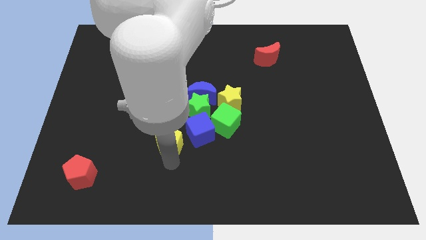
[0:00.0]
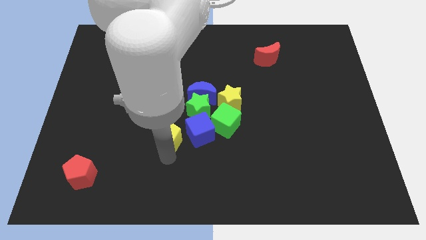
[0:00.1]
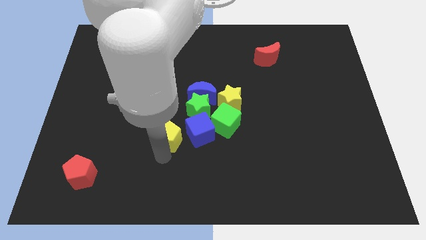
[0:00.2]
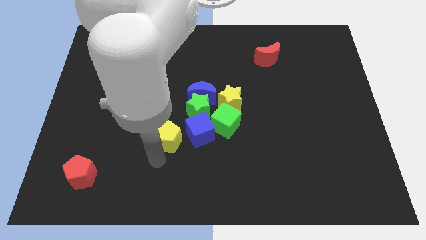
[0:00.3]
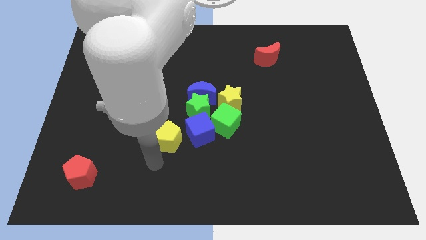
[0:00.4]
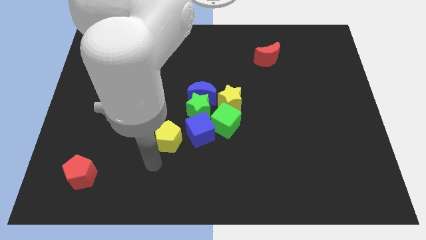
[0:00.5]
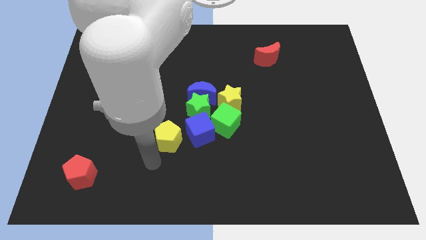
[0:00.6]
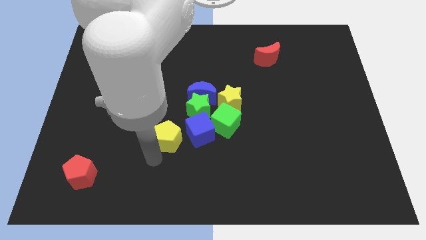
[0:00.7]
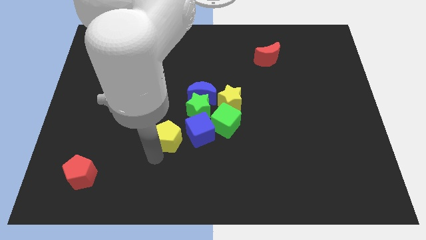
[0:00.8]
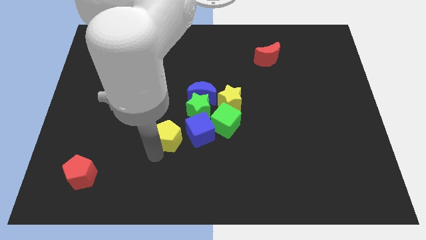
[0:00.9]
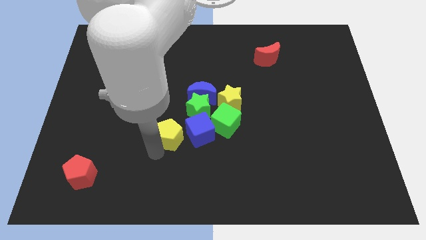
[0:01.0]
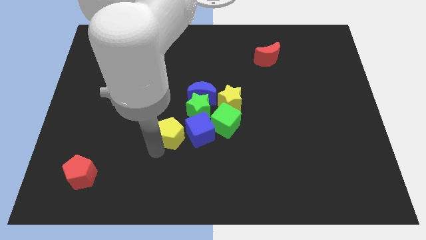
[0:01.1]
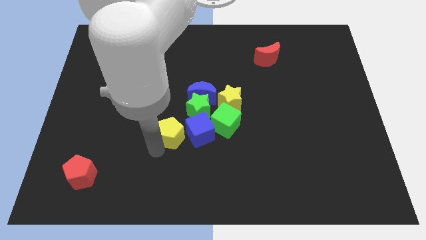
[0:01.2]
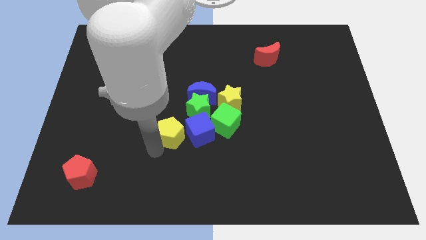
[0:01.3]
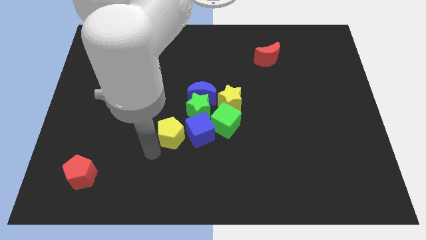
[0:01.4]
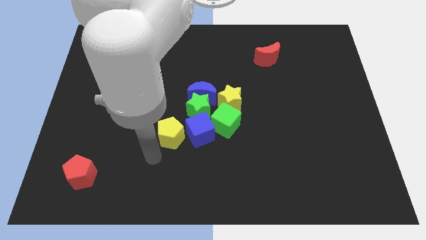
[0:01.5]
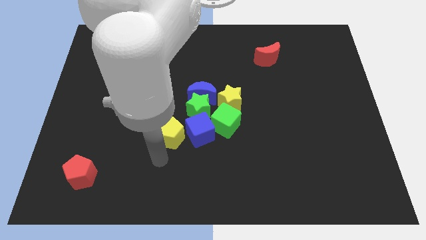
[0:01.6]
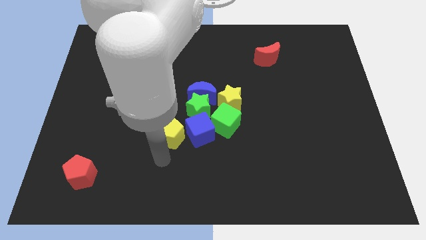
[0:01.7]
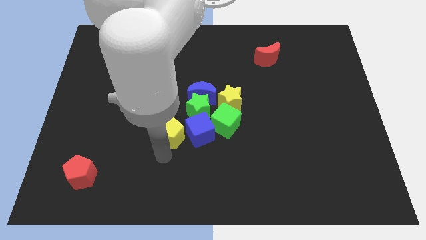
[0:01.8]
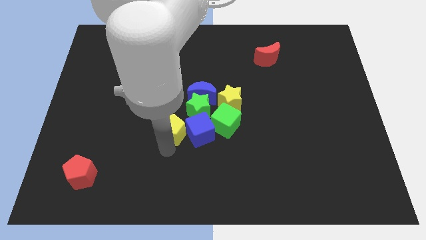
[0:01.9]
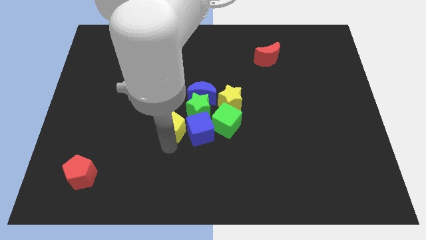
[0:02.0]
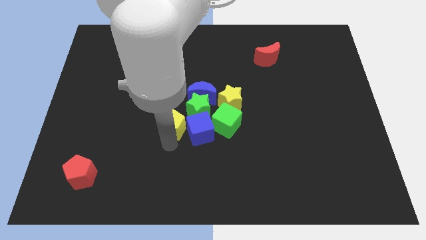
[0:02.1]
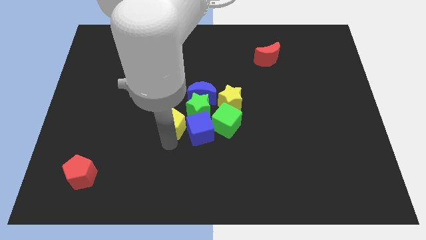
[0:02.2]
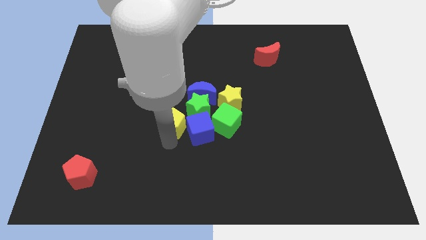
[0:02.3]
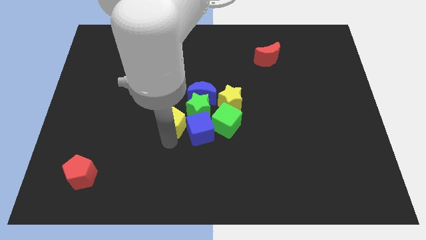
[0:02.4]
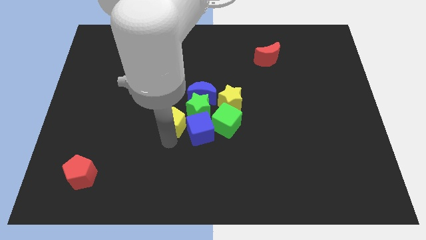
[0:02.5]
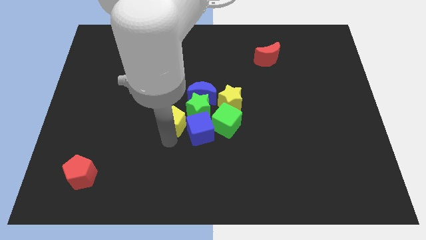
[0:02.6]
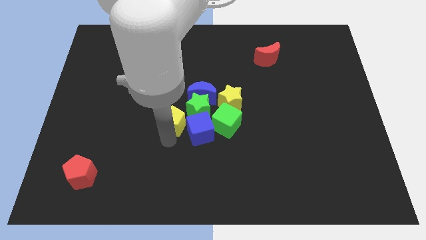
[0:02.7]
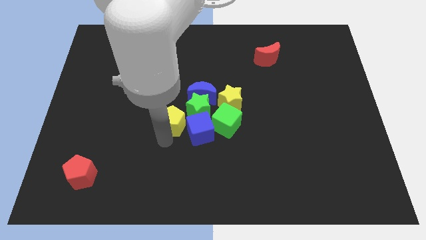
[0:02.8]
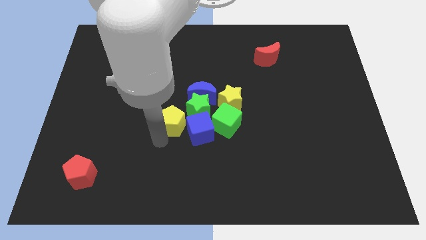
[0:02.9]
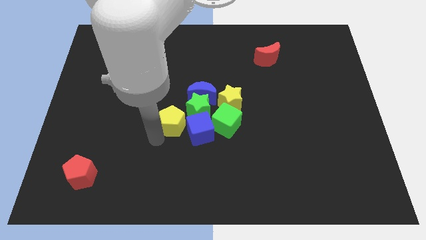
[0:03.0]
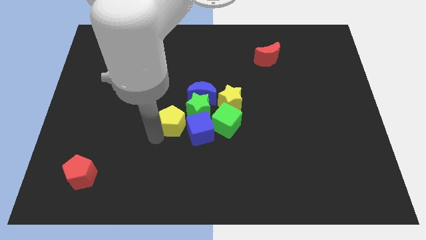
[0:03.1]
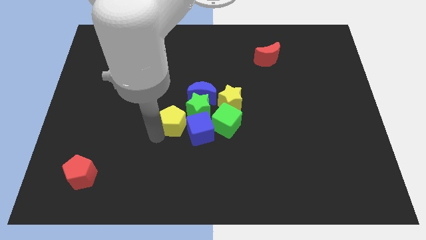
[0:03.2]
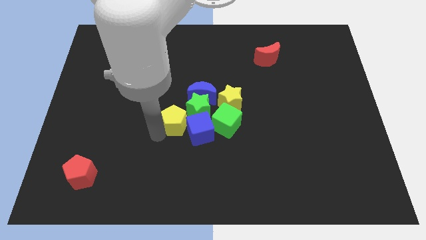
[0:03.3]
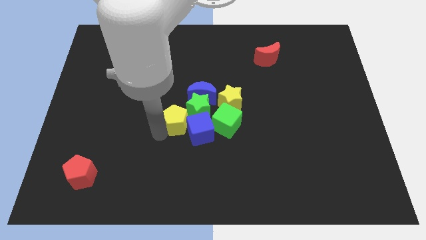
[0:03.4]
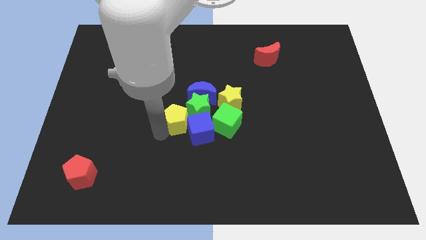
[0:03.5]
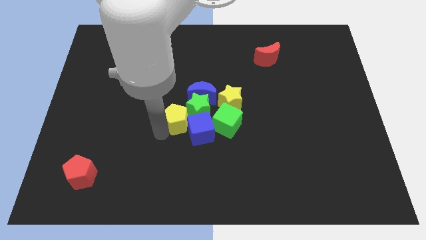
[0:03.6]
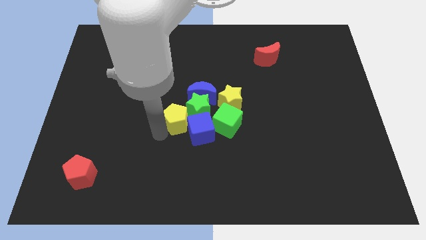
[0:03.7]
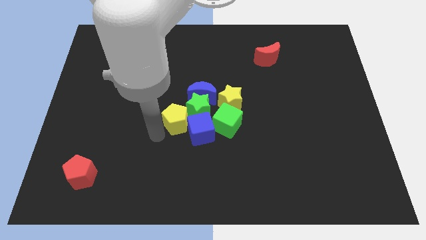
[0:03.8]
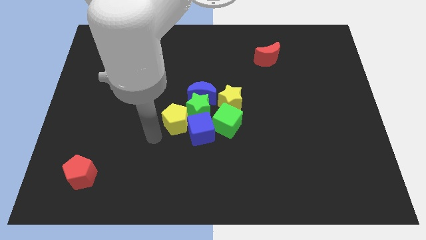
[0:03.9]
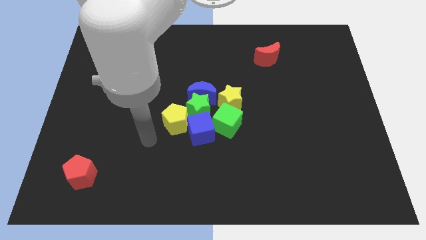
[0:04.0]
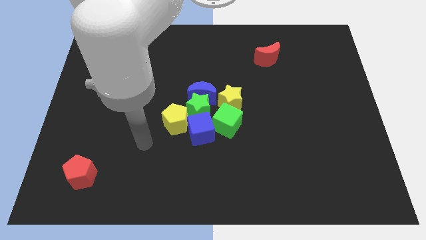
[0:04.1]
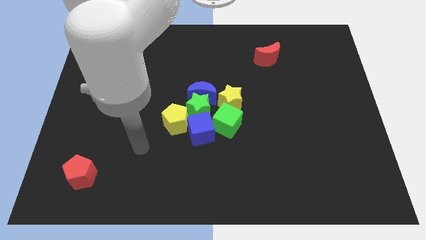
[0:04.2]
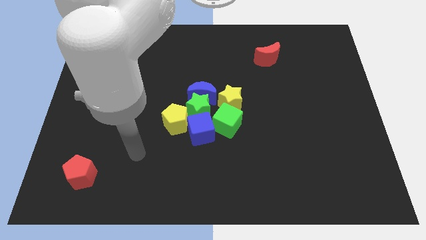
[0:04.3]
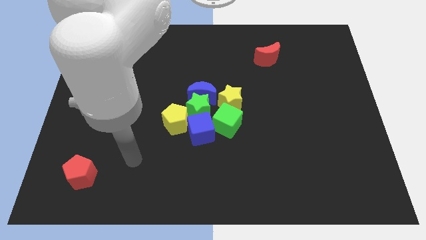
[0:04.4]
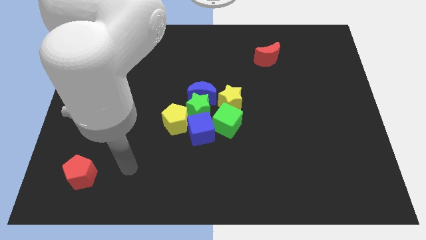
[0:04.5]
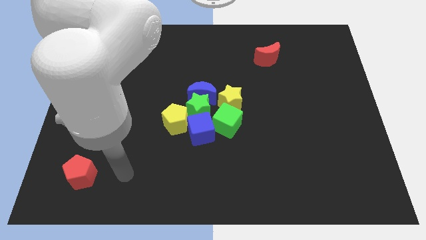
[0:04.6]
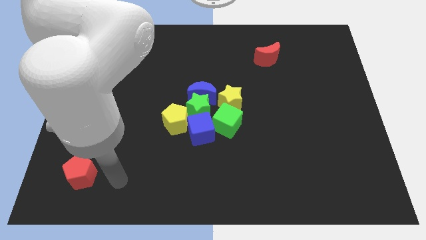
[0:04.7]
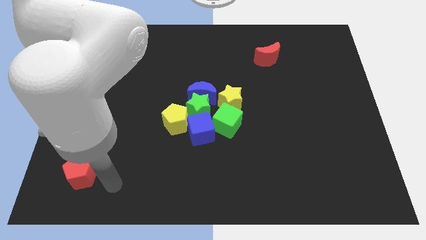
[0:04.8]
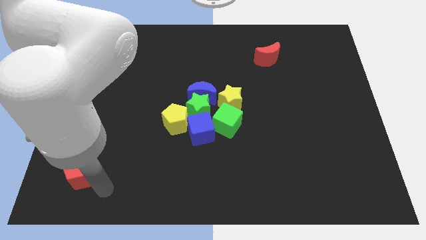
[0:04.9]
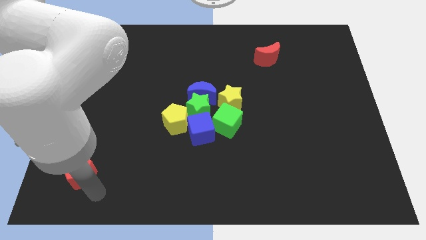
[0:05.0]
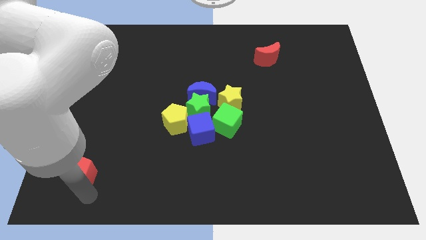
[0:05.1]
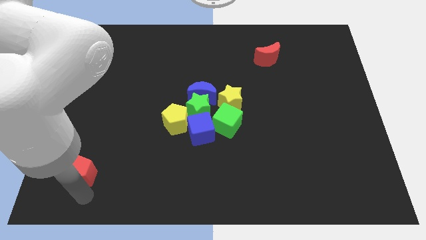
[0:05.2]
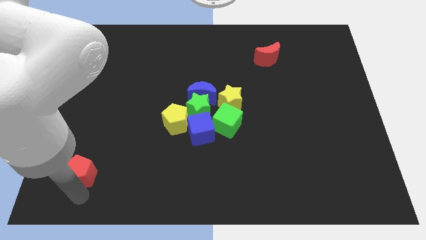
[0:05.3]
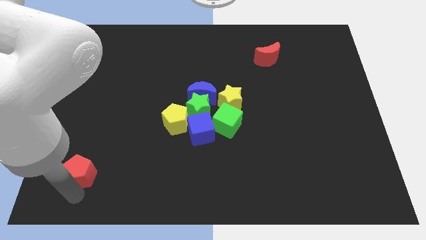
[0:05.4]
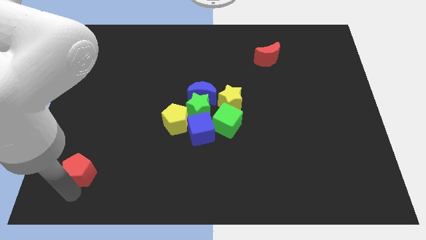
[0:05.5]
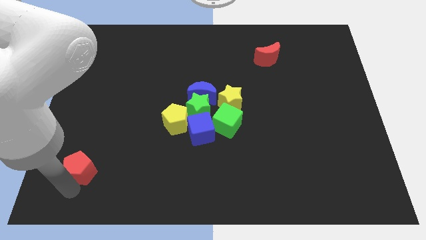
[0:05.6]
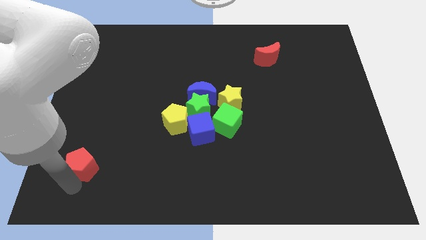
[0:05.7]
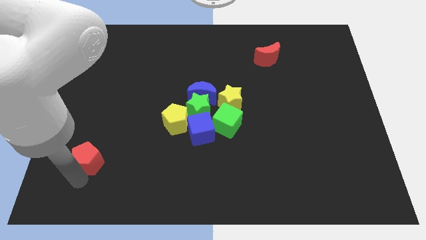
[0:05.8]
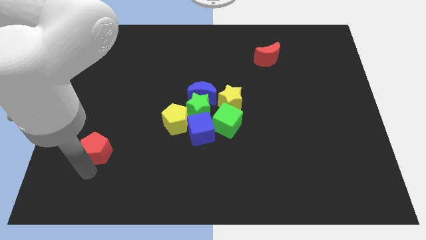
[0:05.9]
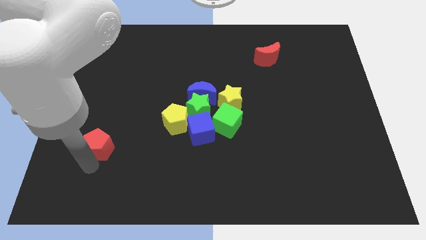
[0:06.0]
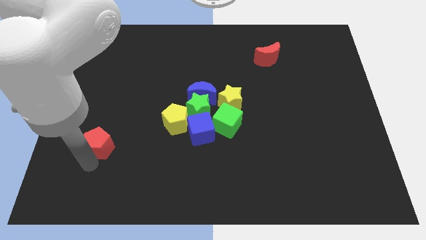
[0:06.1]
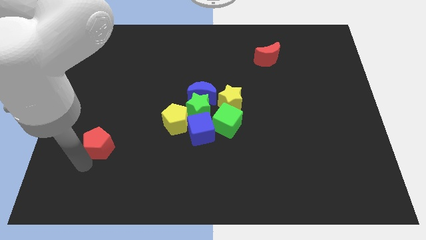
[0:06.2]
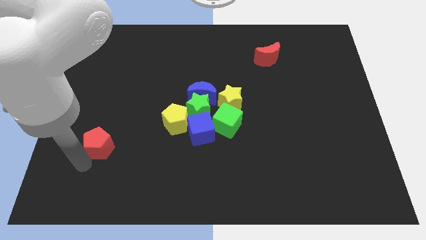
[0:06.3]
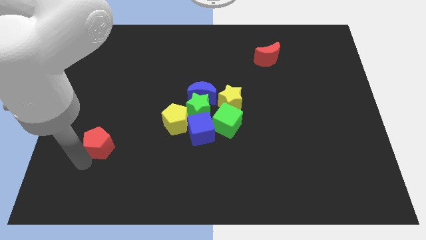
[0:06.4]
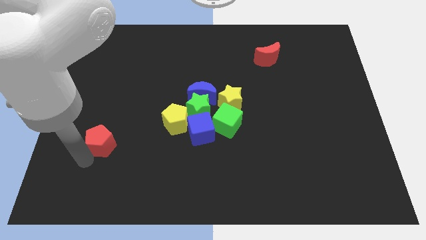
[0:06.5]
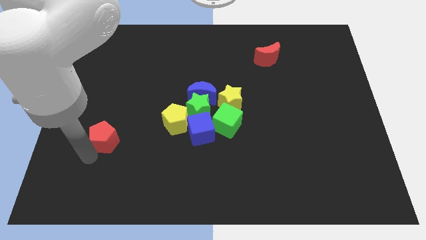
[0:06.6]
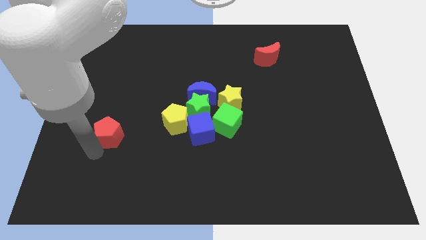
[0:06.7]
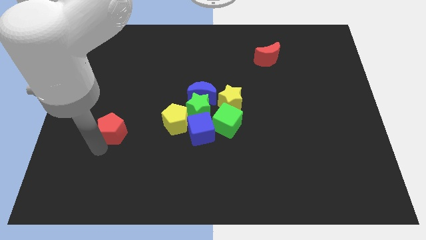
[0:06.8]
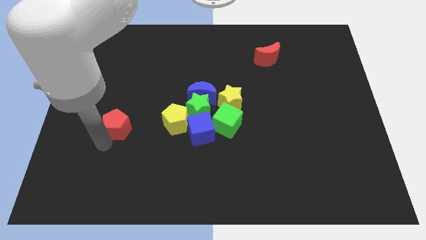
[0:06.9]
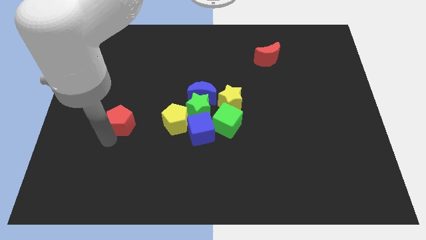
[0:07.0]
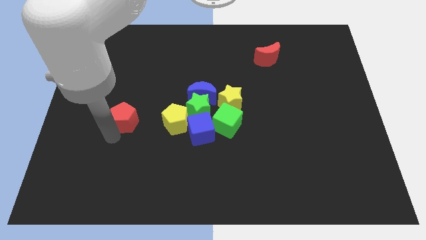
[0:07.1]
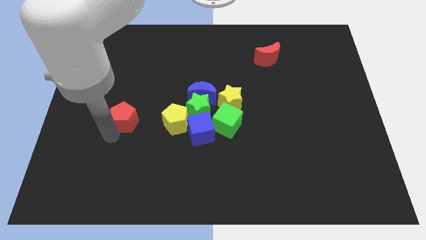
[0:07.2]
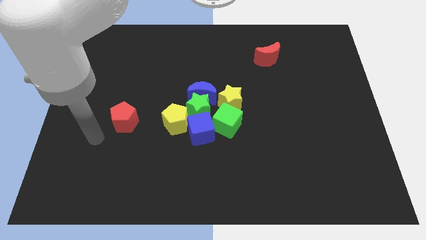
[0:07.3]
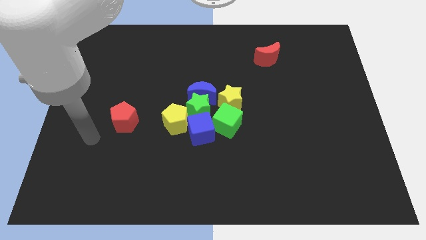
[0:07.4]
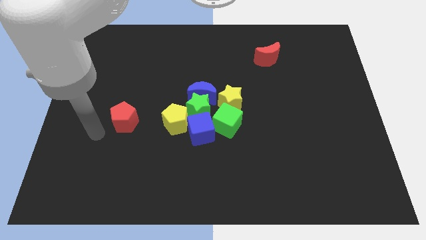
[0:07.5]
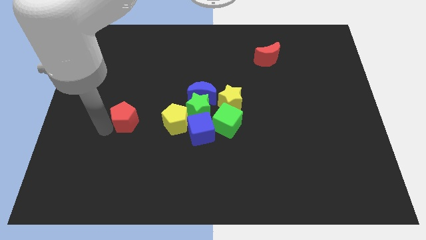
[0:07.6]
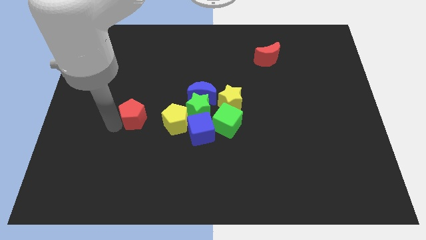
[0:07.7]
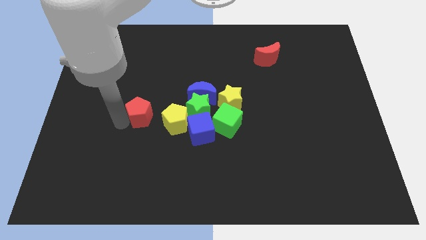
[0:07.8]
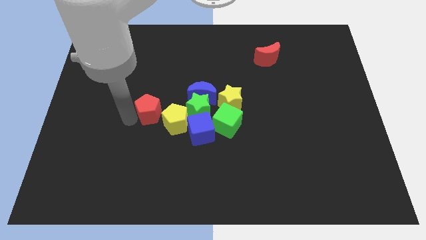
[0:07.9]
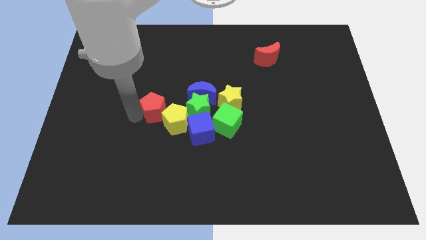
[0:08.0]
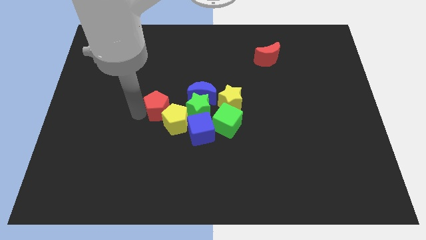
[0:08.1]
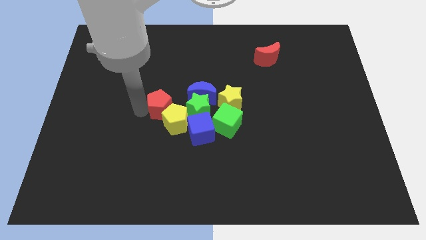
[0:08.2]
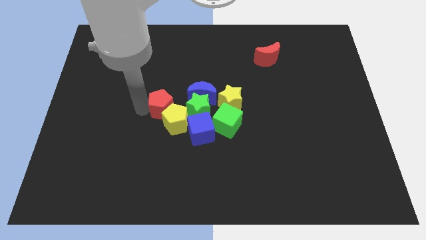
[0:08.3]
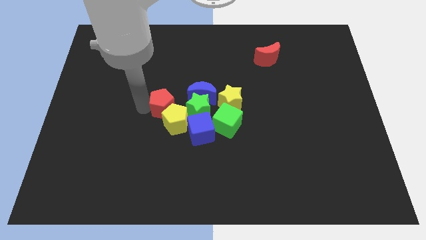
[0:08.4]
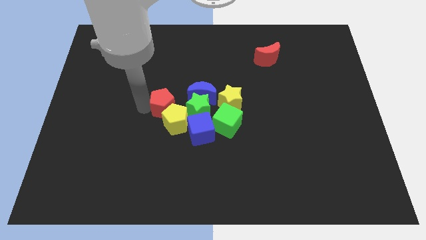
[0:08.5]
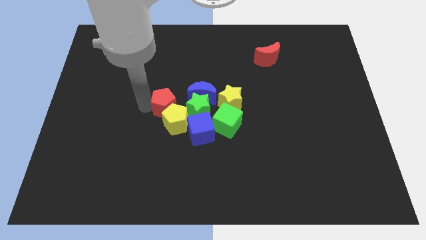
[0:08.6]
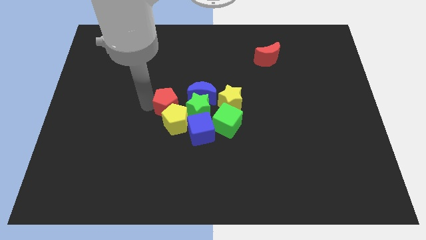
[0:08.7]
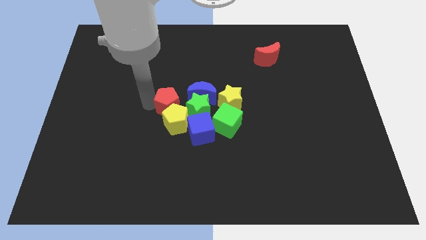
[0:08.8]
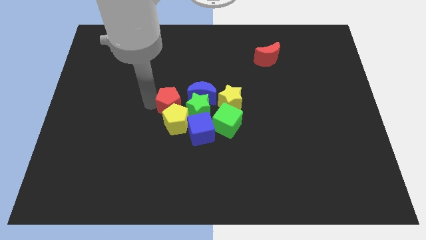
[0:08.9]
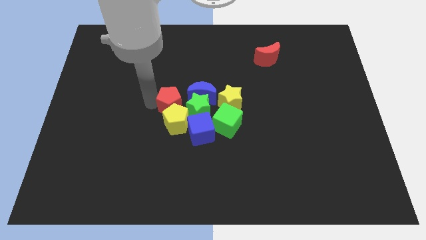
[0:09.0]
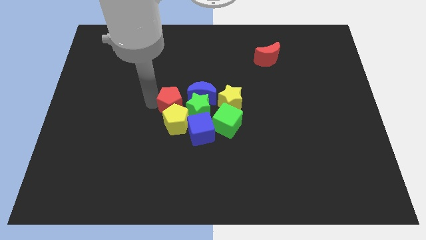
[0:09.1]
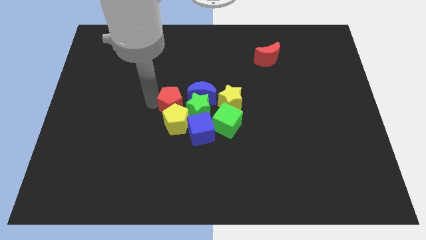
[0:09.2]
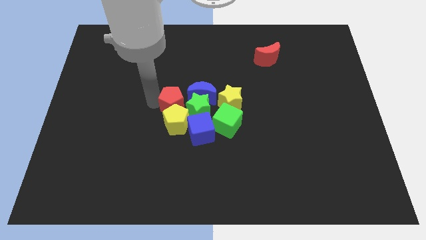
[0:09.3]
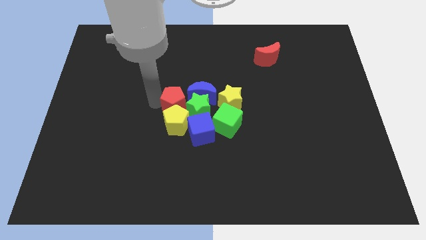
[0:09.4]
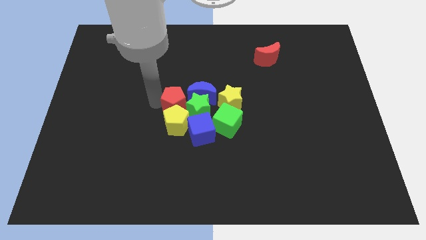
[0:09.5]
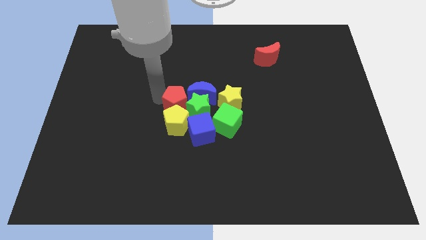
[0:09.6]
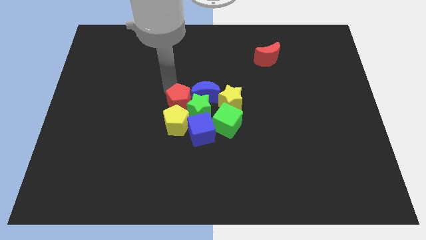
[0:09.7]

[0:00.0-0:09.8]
group up all the blocks at the center of the board except the red crescent
